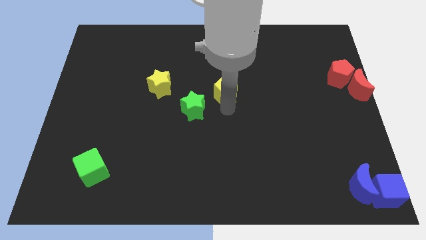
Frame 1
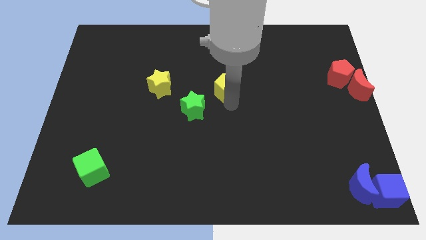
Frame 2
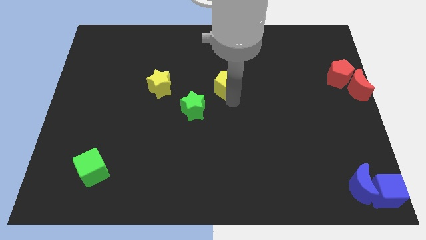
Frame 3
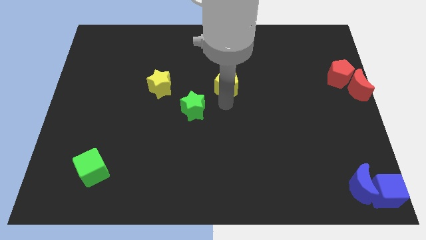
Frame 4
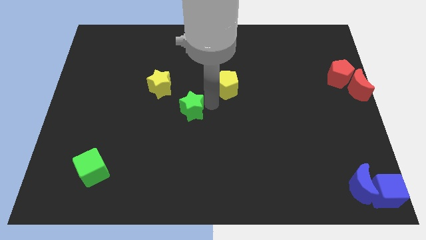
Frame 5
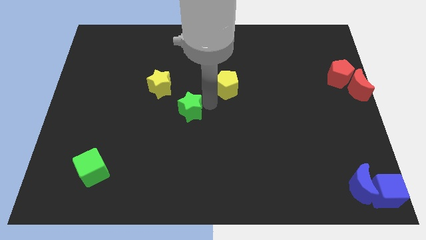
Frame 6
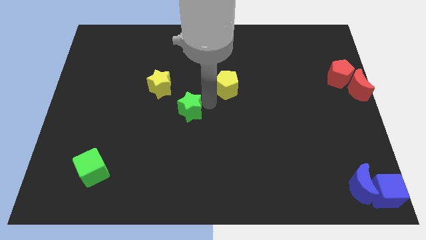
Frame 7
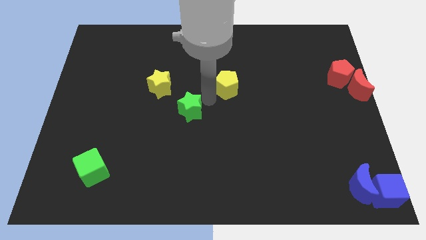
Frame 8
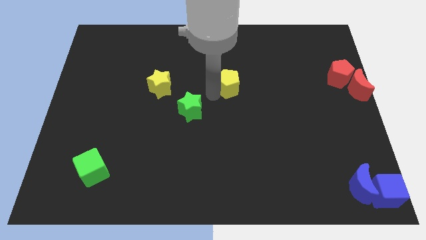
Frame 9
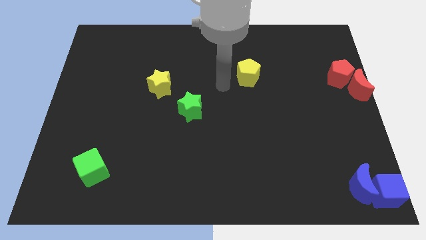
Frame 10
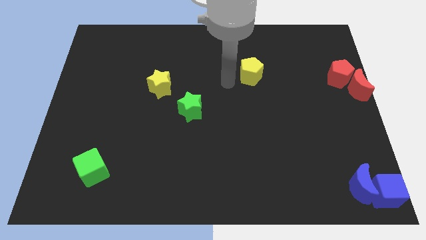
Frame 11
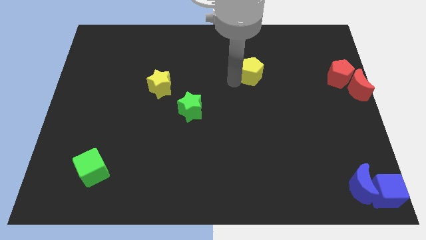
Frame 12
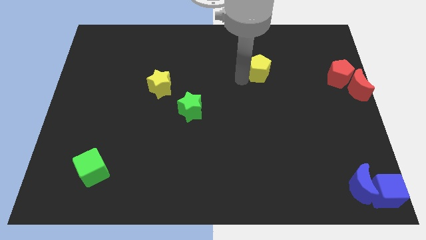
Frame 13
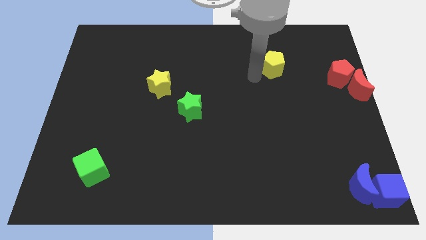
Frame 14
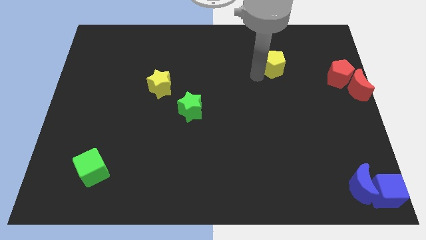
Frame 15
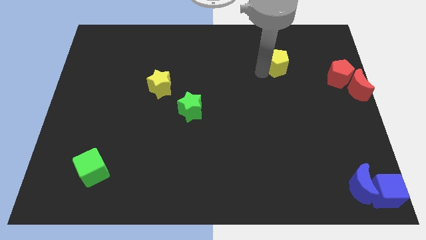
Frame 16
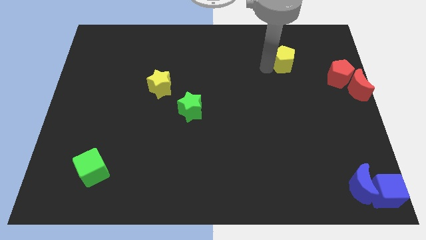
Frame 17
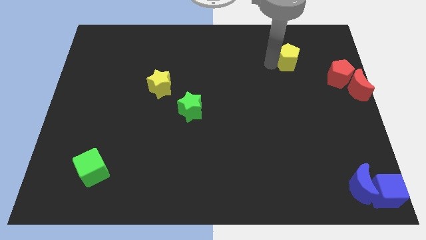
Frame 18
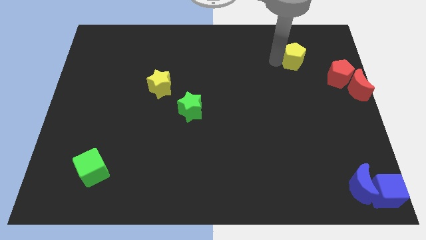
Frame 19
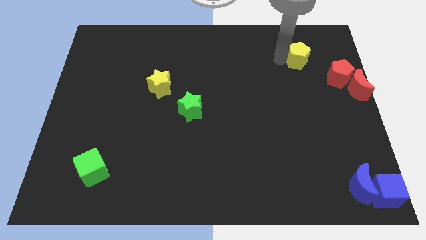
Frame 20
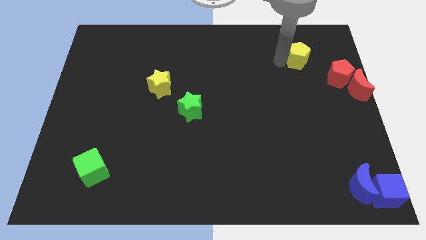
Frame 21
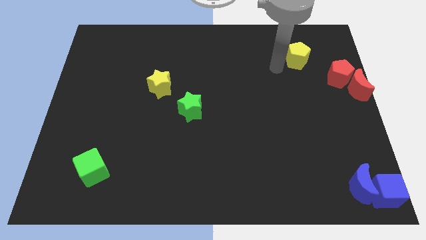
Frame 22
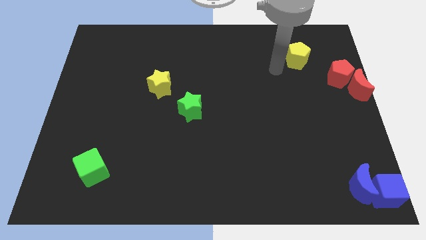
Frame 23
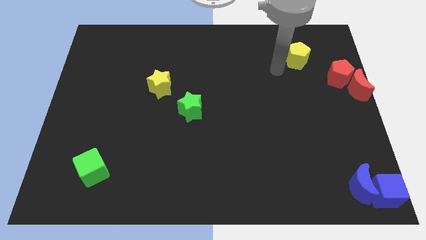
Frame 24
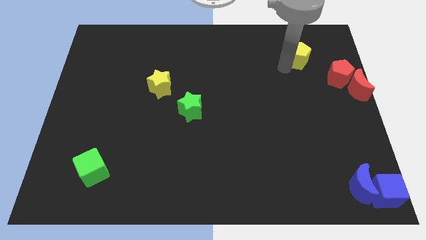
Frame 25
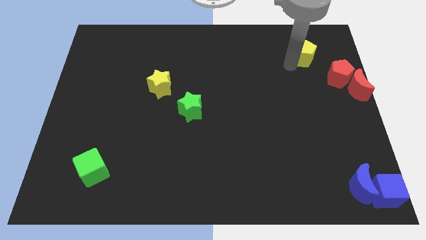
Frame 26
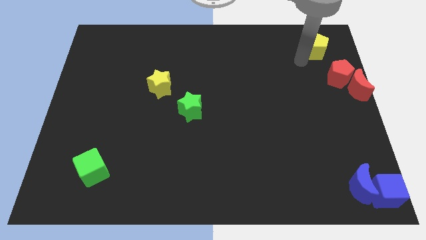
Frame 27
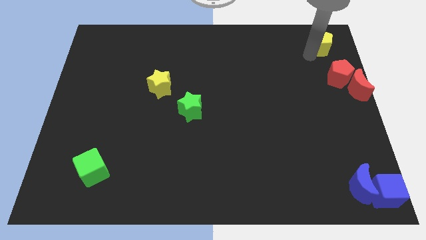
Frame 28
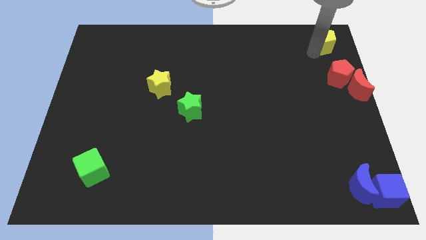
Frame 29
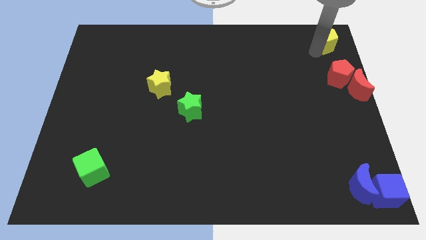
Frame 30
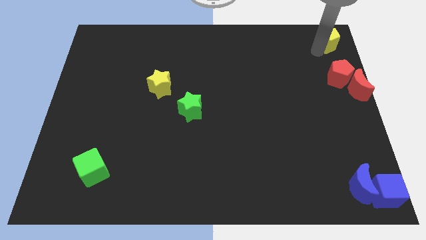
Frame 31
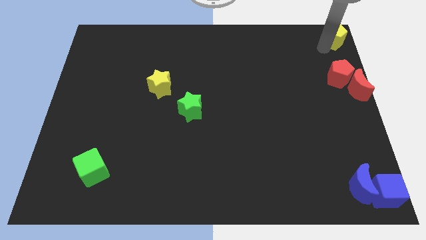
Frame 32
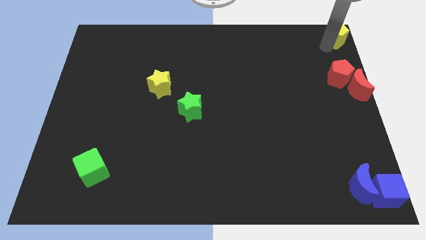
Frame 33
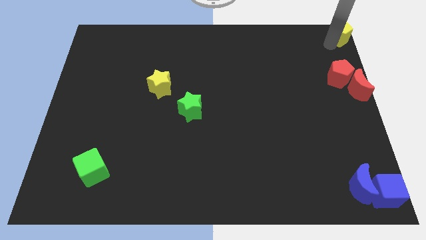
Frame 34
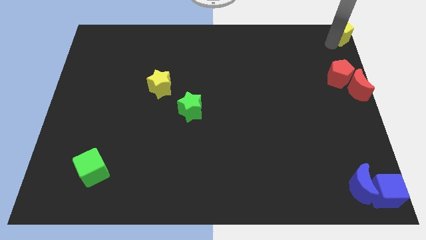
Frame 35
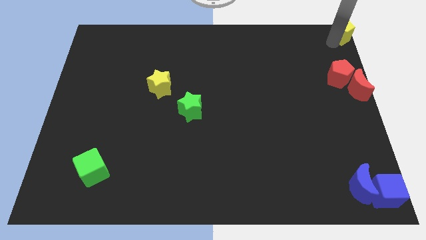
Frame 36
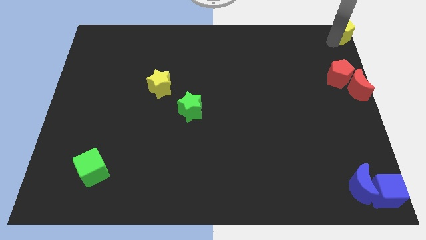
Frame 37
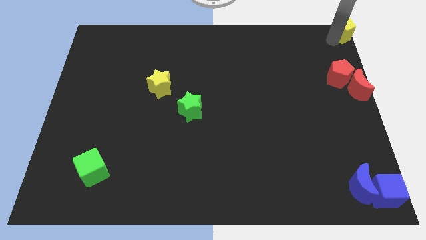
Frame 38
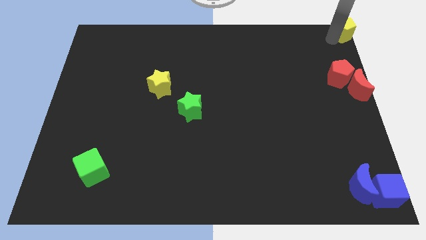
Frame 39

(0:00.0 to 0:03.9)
move yellow pentagon to the top right corner

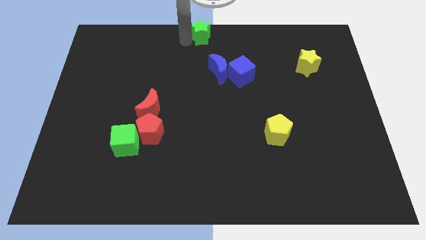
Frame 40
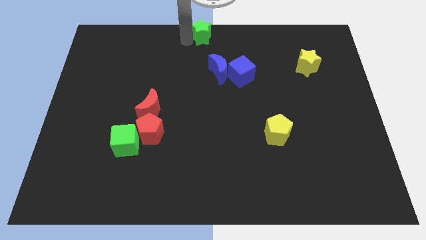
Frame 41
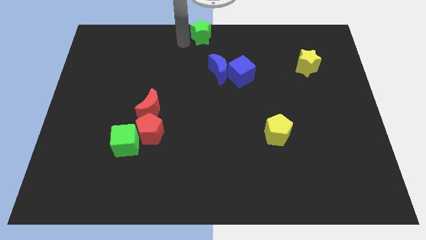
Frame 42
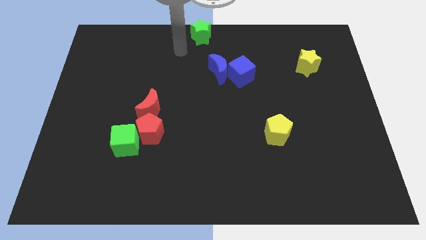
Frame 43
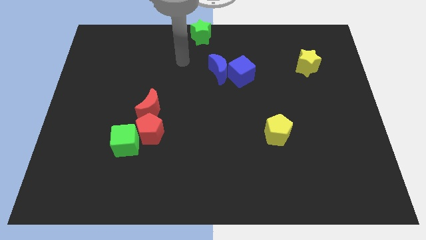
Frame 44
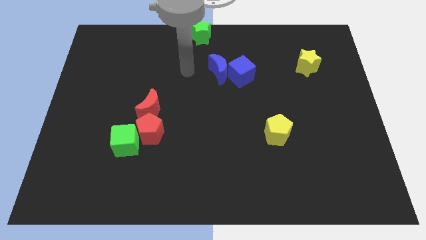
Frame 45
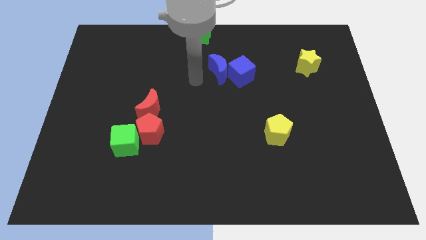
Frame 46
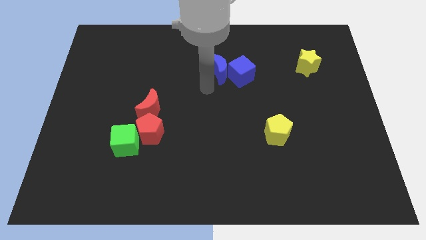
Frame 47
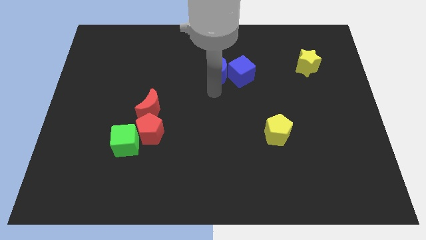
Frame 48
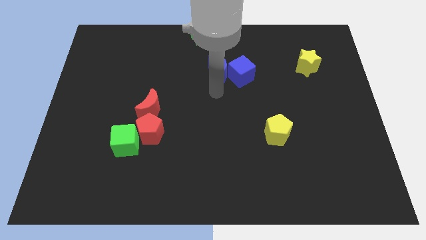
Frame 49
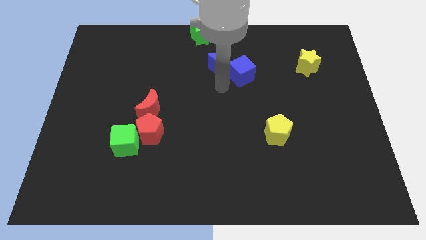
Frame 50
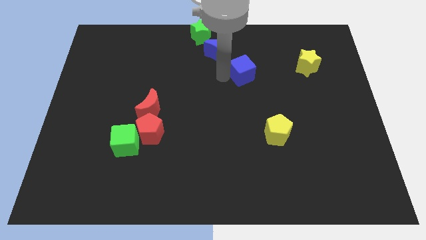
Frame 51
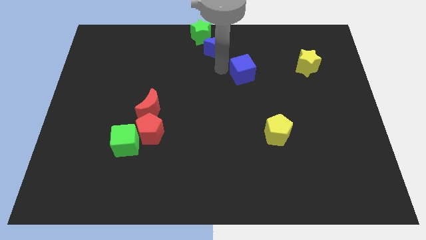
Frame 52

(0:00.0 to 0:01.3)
place the green star at the top center

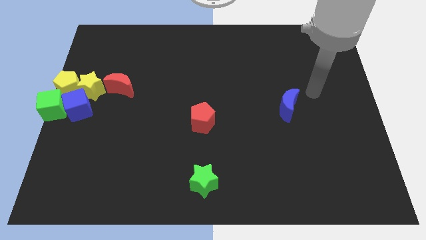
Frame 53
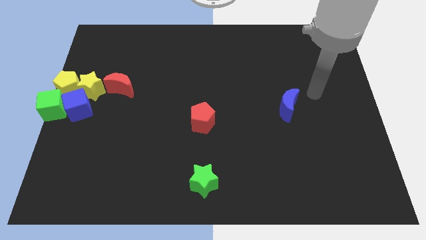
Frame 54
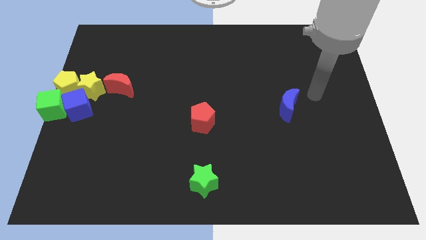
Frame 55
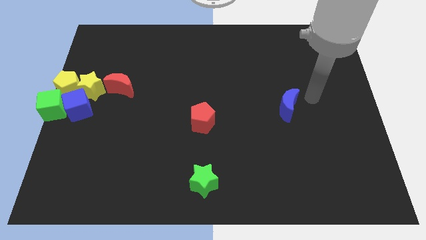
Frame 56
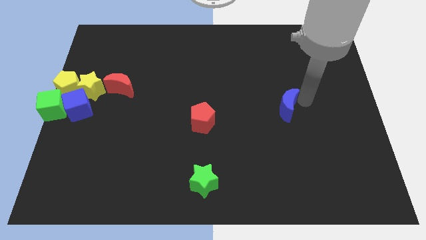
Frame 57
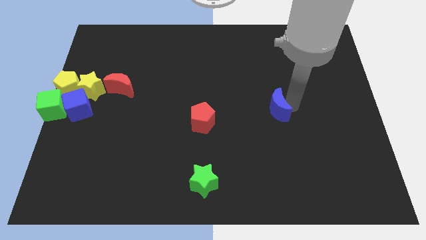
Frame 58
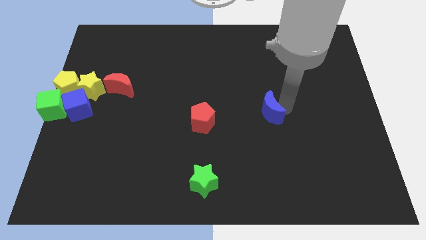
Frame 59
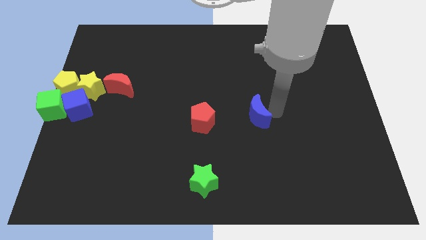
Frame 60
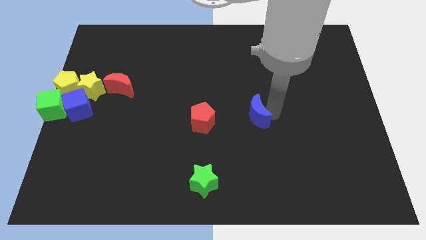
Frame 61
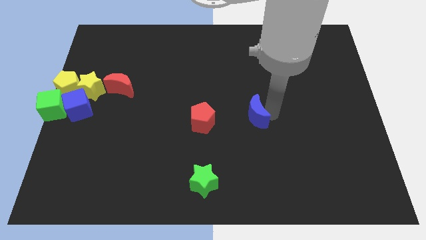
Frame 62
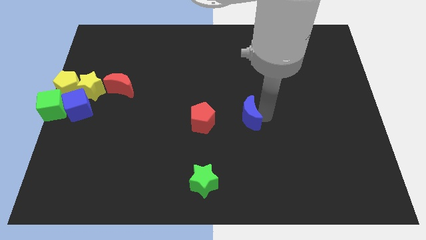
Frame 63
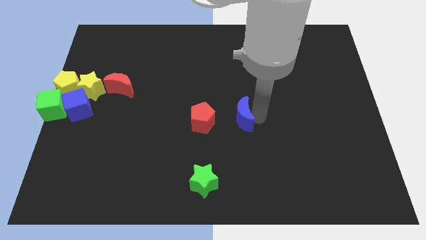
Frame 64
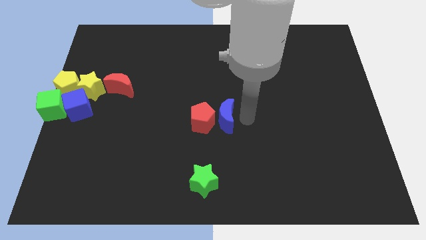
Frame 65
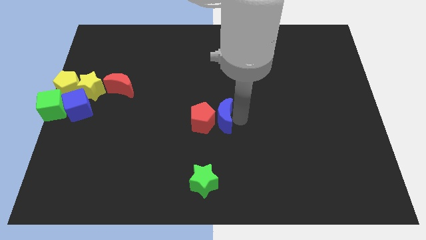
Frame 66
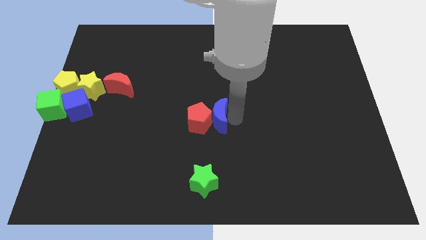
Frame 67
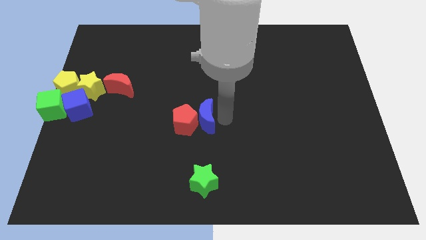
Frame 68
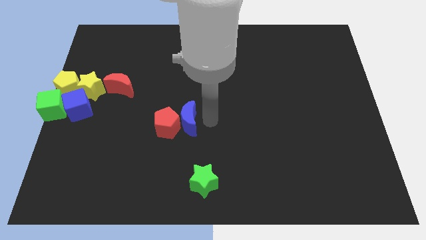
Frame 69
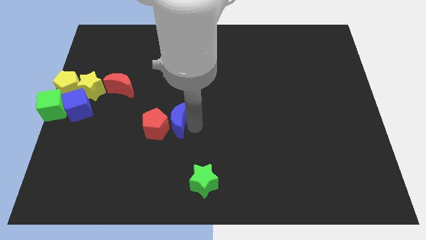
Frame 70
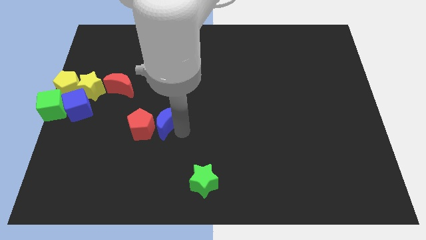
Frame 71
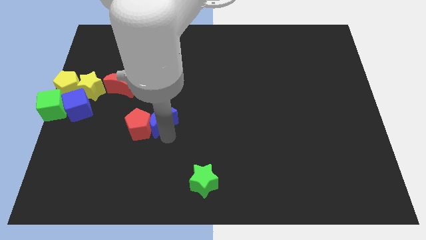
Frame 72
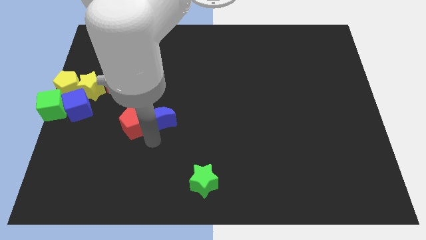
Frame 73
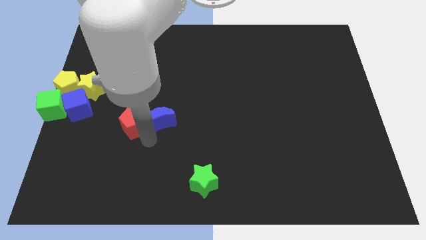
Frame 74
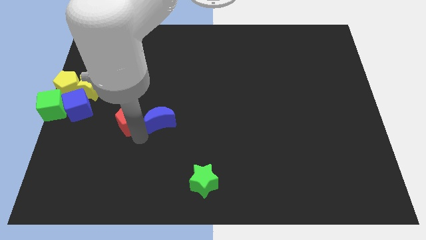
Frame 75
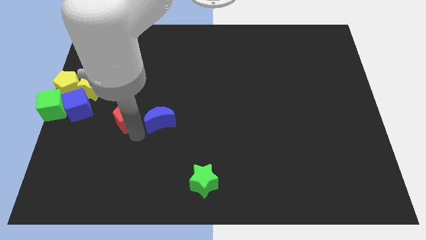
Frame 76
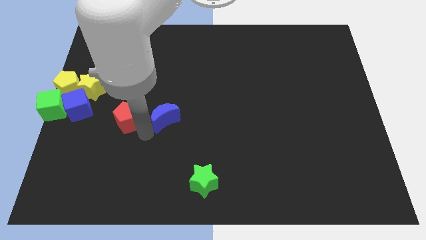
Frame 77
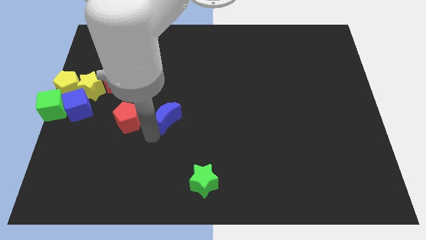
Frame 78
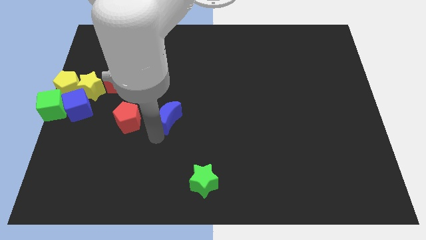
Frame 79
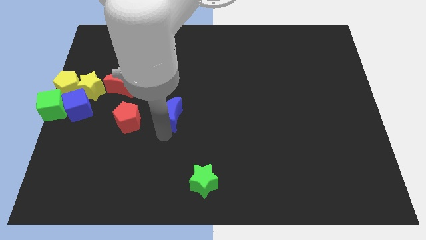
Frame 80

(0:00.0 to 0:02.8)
place the red pentagon down to the red moon

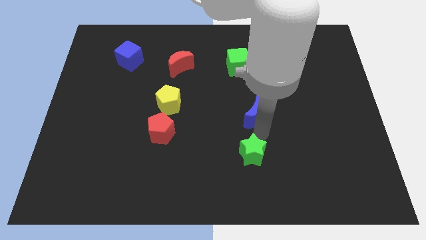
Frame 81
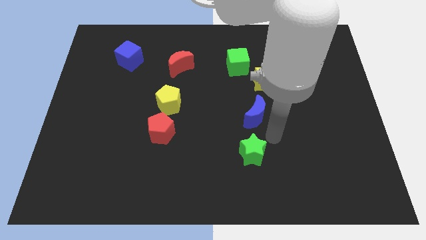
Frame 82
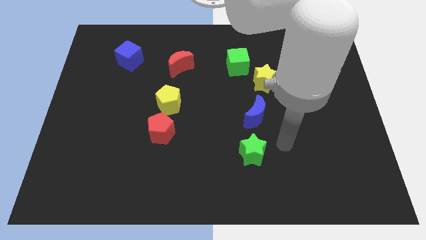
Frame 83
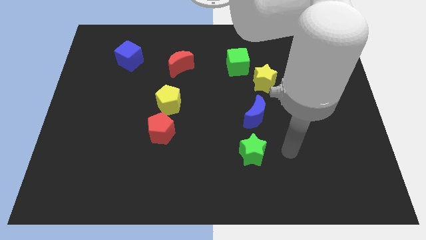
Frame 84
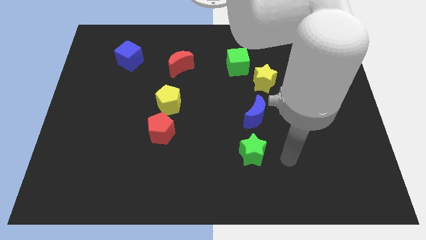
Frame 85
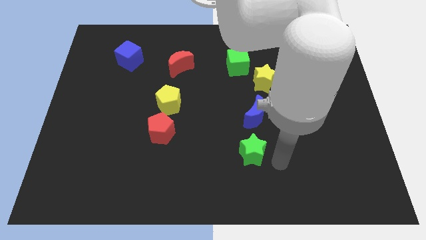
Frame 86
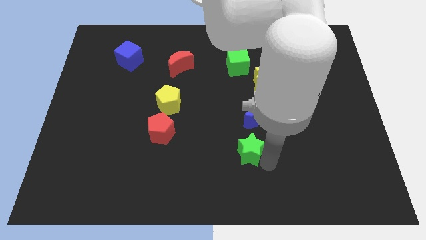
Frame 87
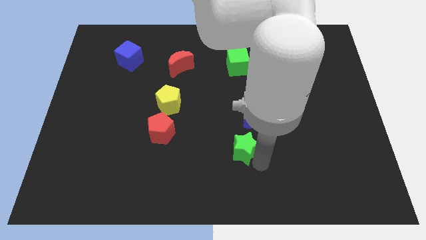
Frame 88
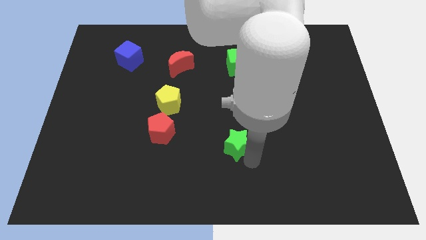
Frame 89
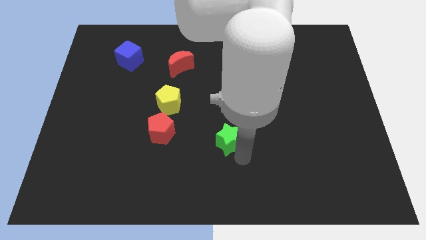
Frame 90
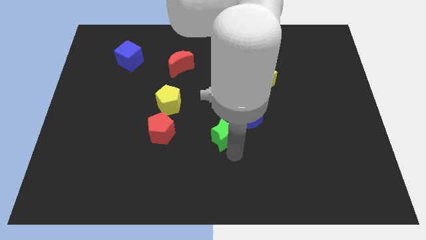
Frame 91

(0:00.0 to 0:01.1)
move the green star towards the centre
